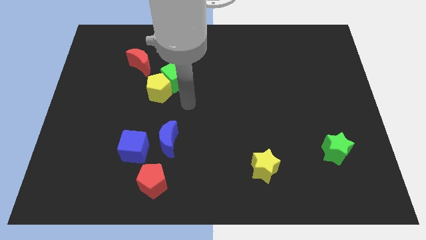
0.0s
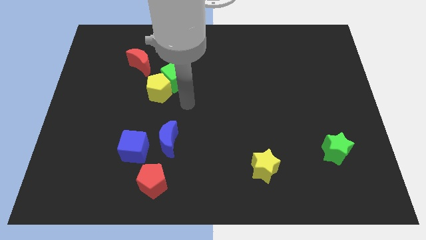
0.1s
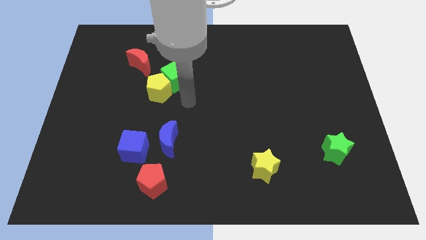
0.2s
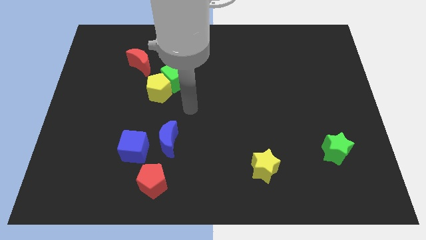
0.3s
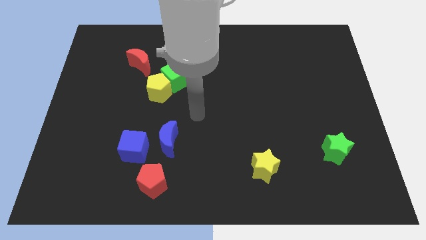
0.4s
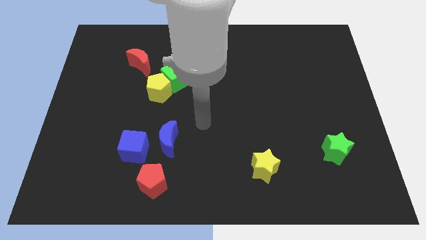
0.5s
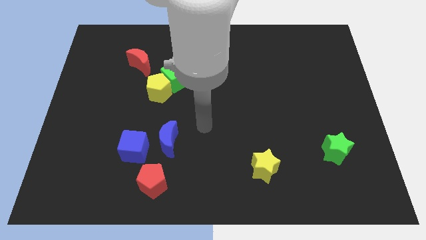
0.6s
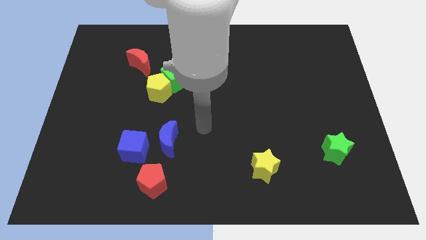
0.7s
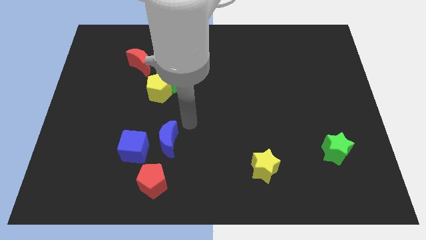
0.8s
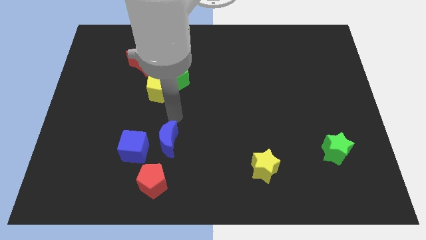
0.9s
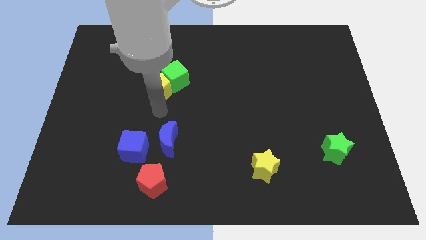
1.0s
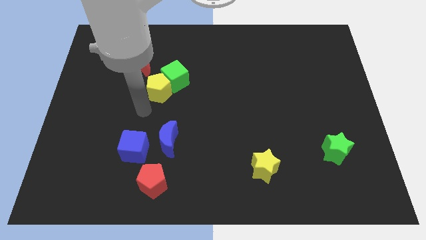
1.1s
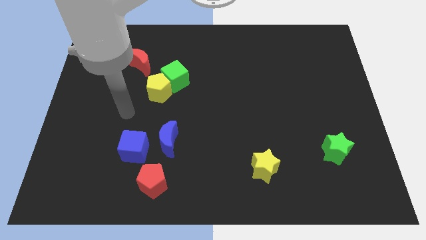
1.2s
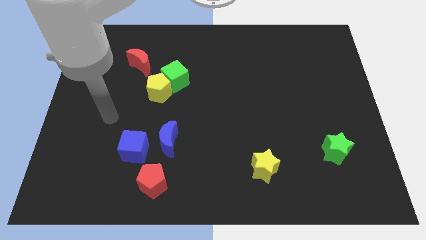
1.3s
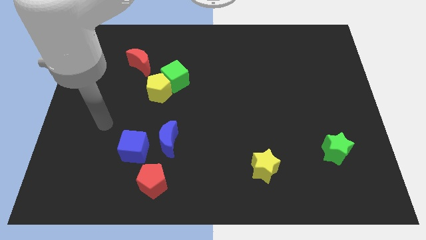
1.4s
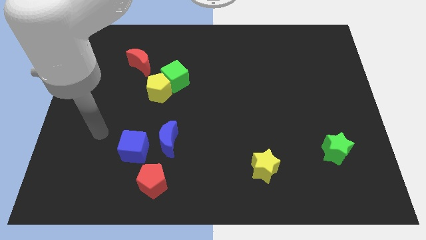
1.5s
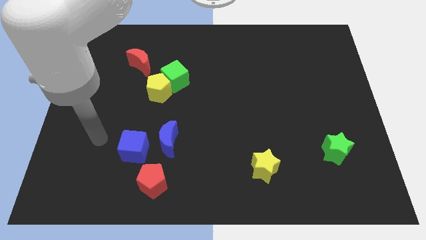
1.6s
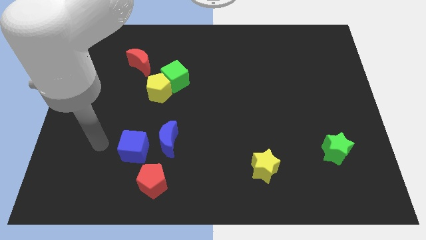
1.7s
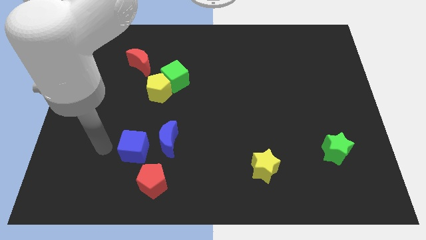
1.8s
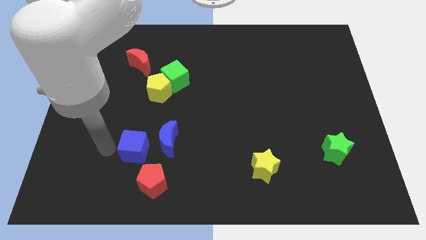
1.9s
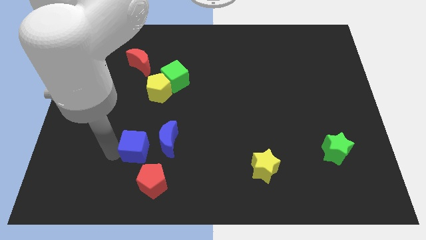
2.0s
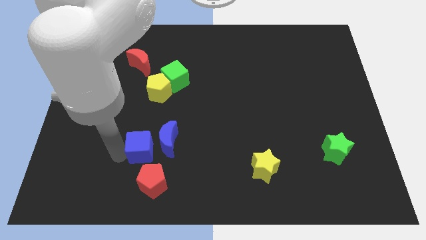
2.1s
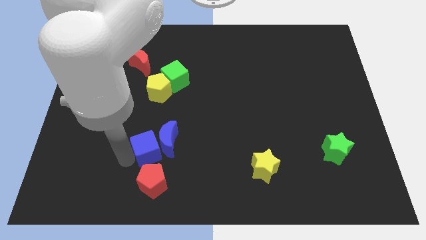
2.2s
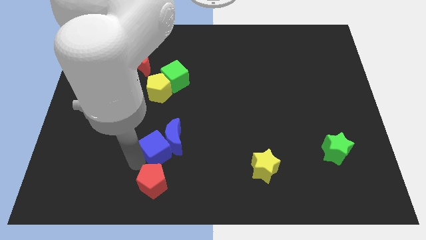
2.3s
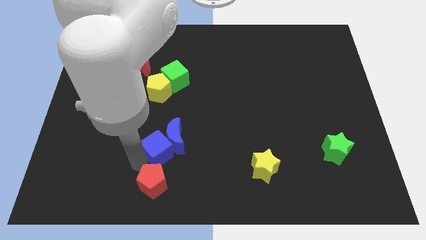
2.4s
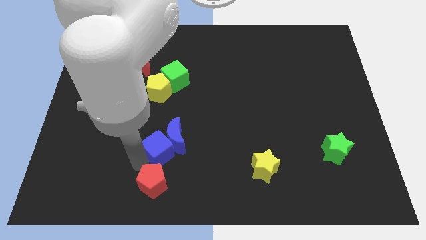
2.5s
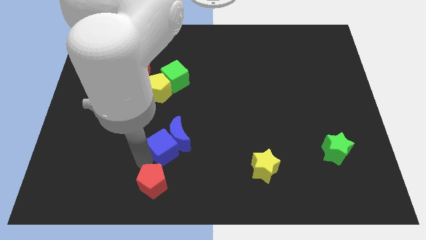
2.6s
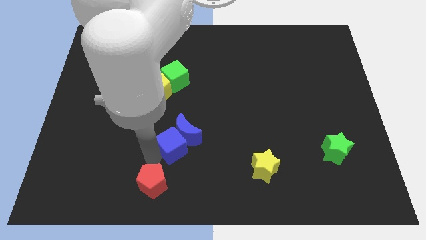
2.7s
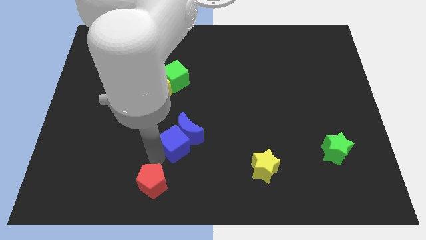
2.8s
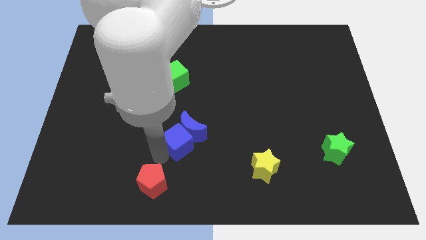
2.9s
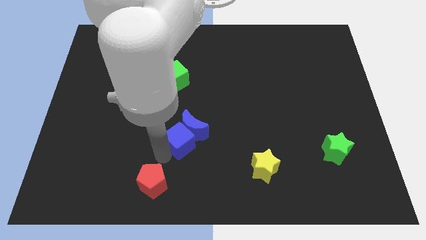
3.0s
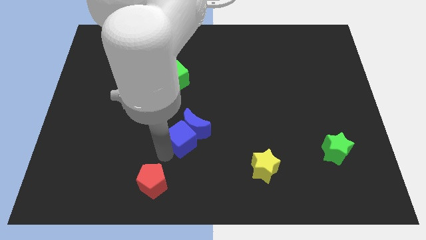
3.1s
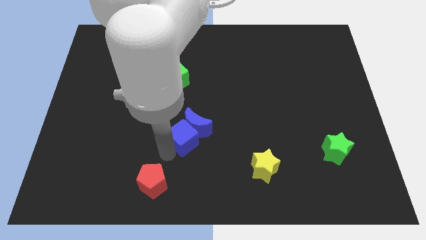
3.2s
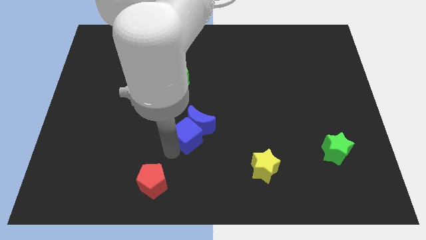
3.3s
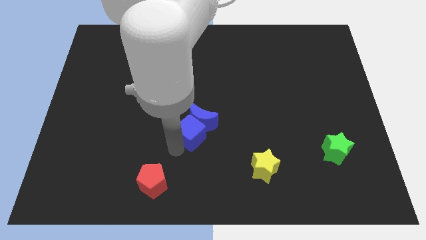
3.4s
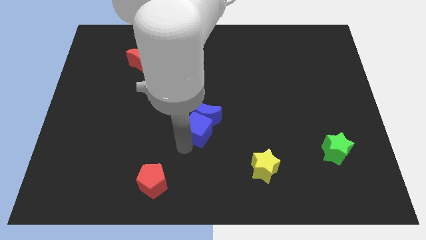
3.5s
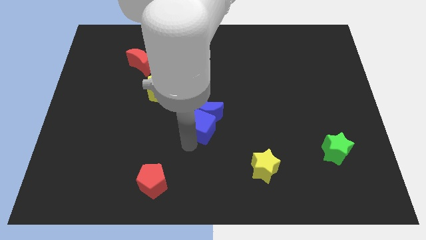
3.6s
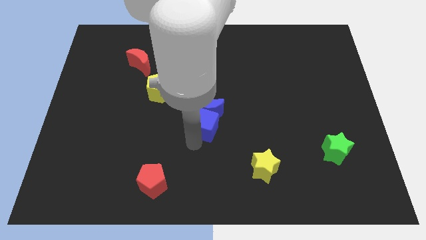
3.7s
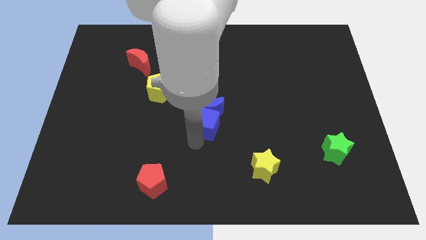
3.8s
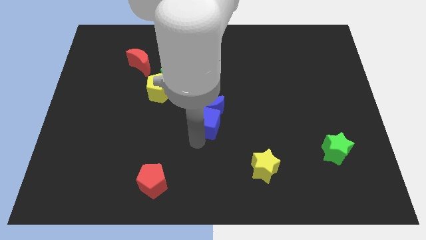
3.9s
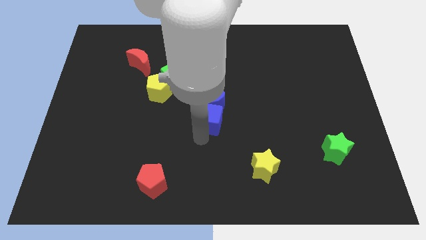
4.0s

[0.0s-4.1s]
push blue cube towards upside

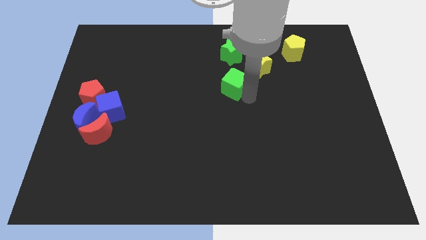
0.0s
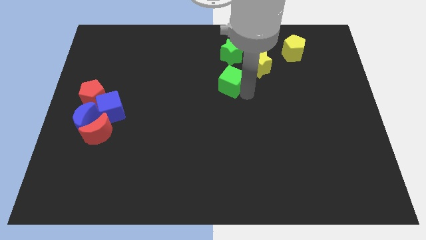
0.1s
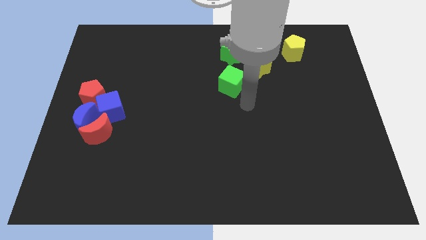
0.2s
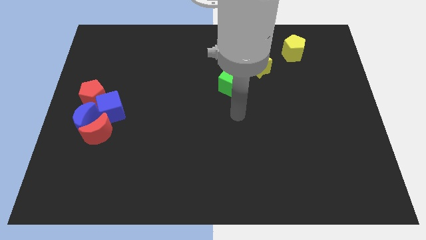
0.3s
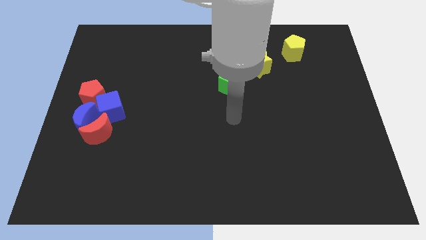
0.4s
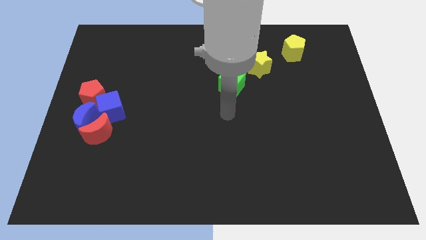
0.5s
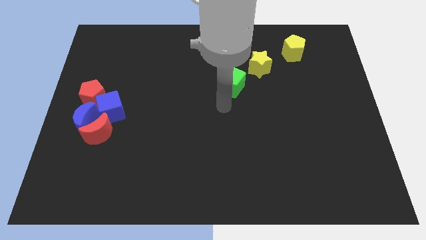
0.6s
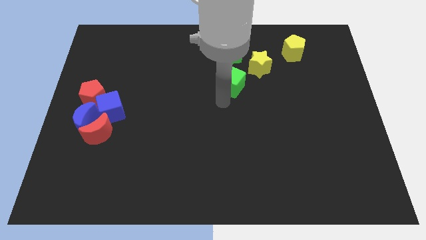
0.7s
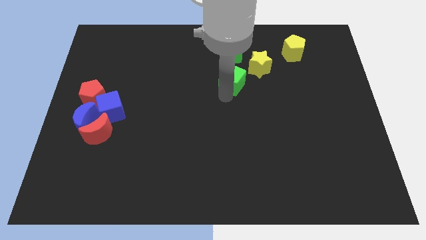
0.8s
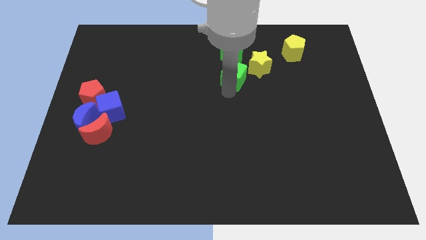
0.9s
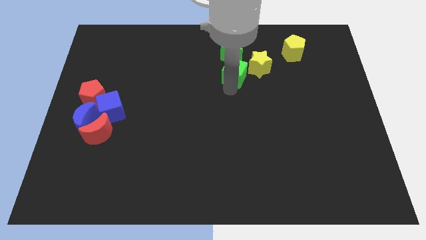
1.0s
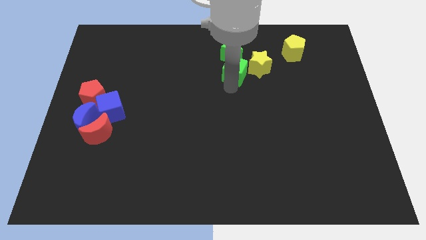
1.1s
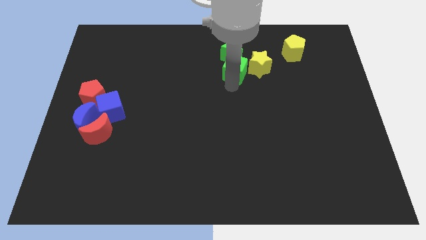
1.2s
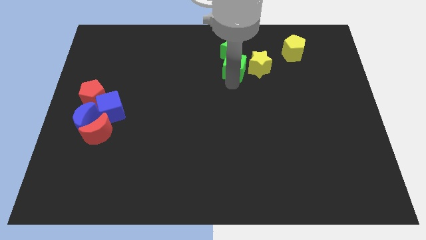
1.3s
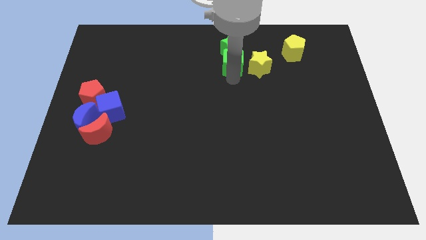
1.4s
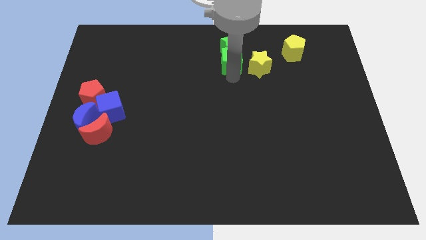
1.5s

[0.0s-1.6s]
slide the green cube into the bottom side of the green star

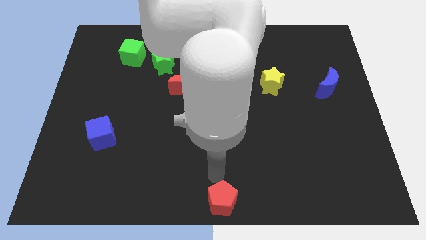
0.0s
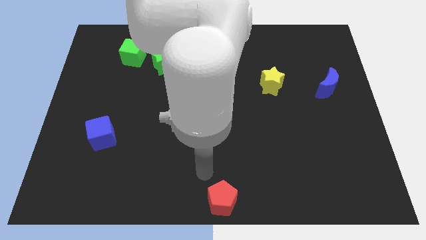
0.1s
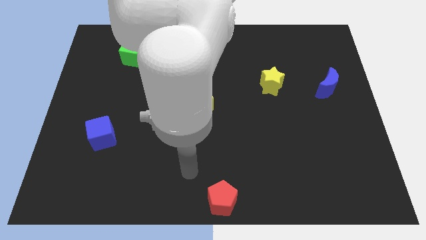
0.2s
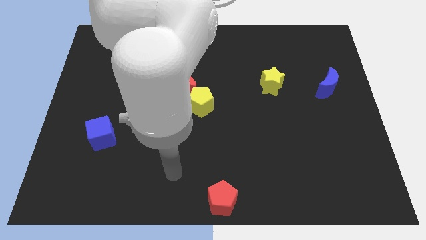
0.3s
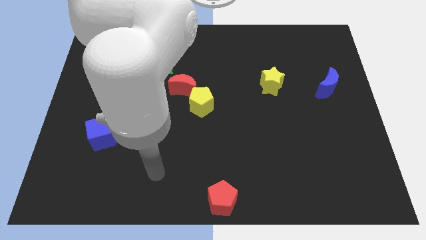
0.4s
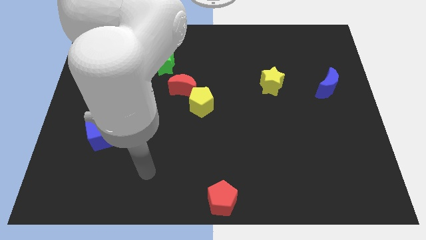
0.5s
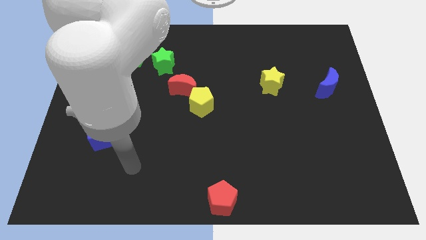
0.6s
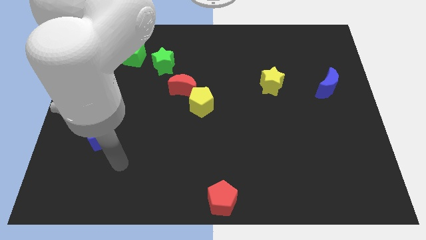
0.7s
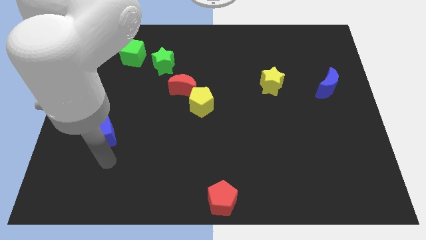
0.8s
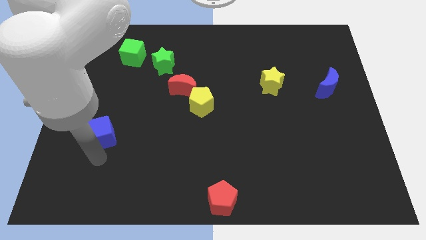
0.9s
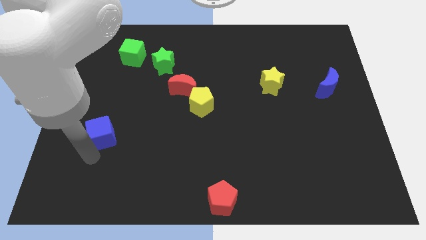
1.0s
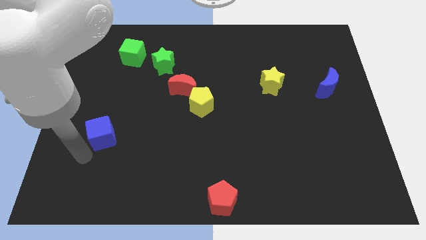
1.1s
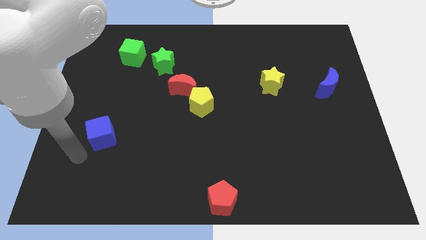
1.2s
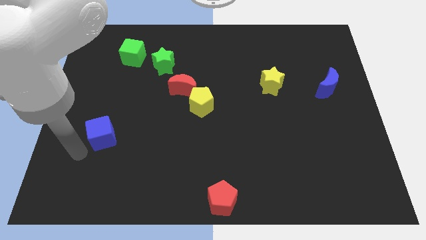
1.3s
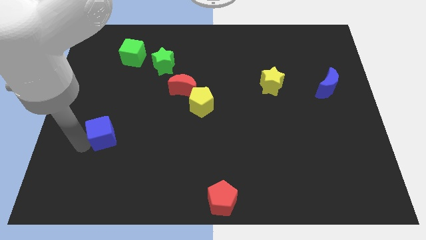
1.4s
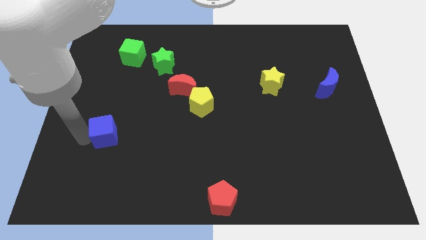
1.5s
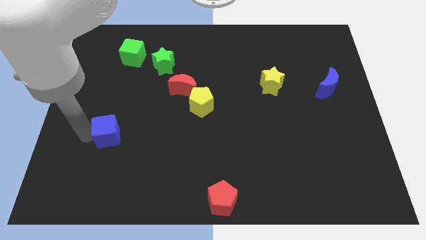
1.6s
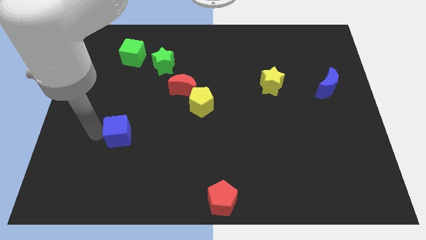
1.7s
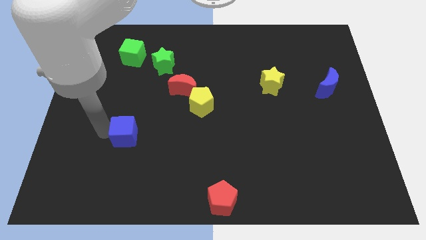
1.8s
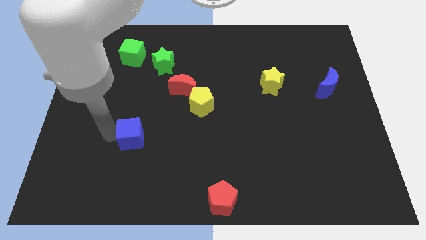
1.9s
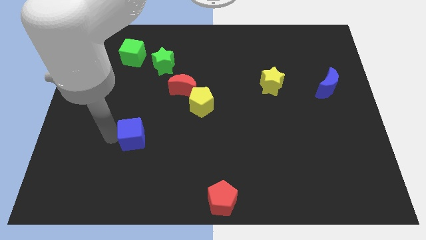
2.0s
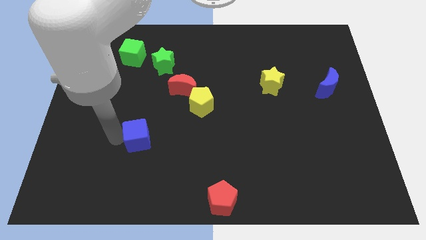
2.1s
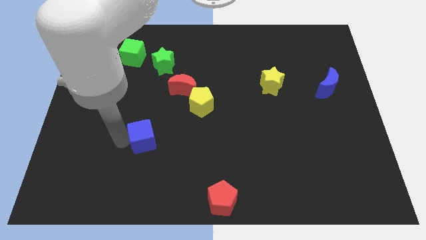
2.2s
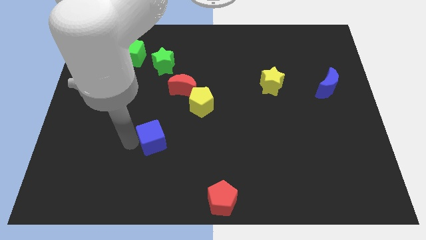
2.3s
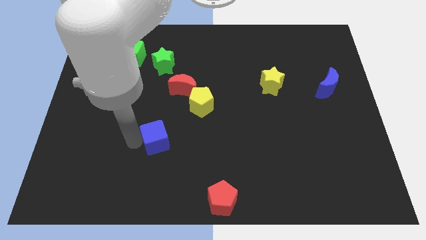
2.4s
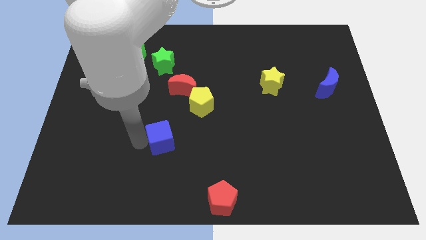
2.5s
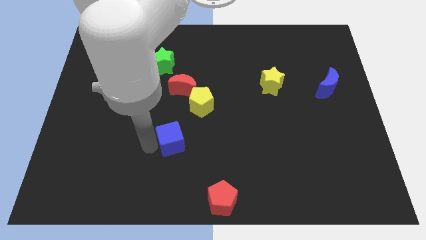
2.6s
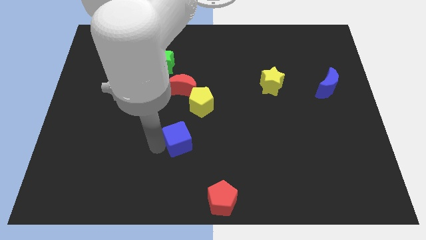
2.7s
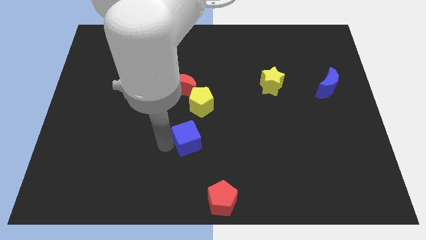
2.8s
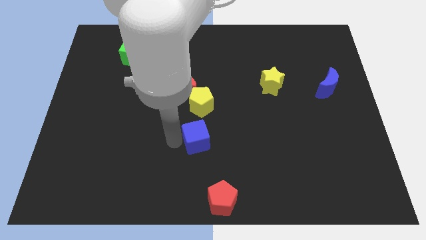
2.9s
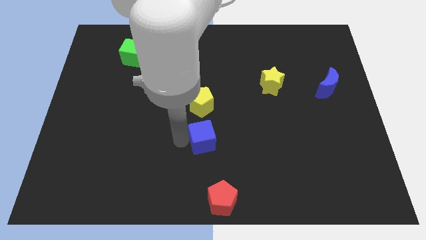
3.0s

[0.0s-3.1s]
push the blue cube below the yellow pentagon
